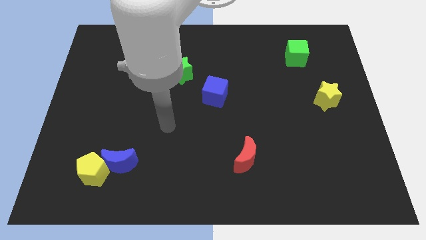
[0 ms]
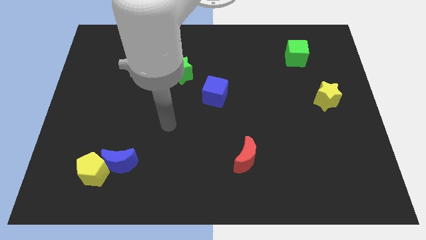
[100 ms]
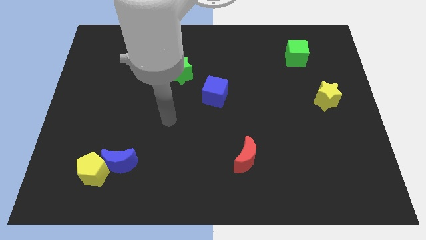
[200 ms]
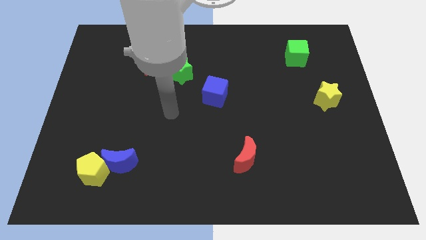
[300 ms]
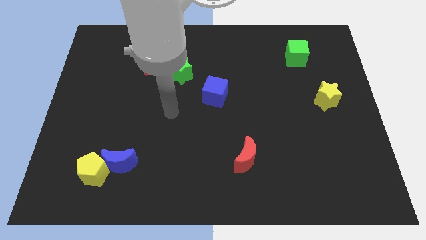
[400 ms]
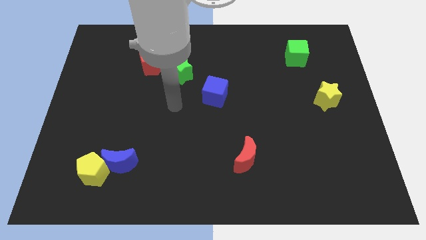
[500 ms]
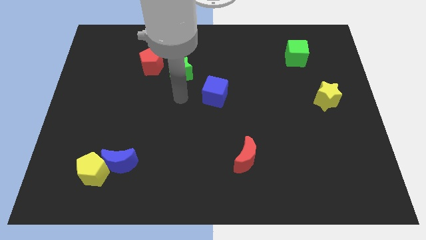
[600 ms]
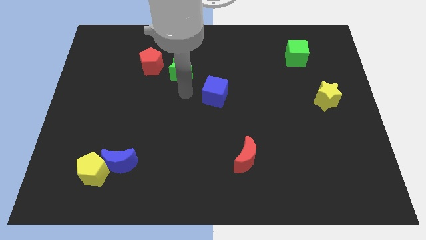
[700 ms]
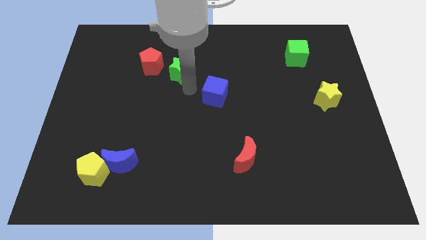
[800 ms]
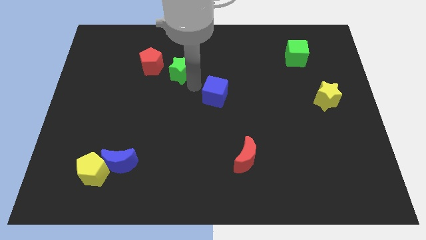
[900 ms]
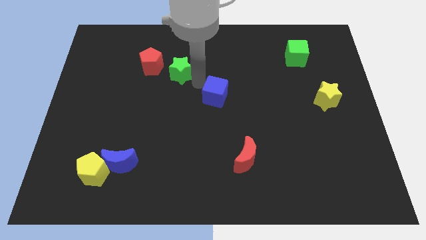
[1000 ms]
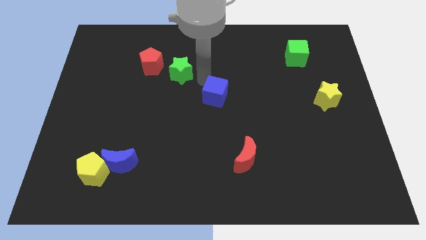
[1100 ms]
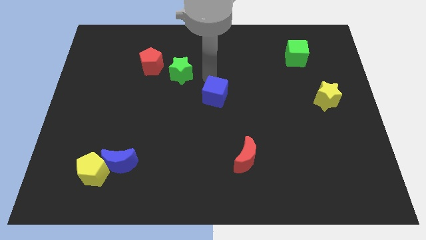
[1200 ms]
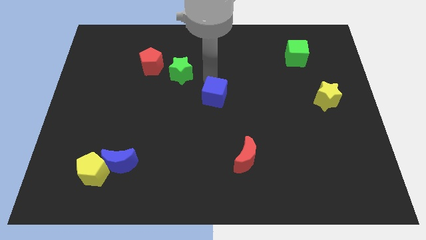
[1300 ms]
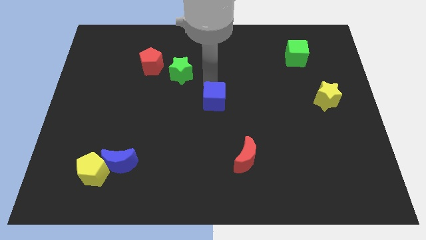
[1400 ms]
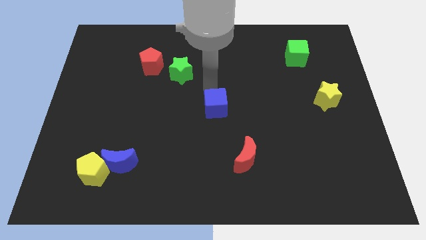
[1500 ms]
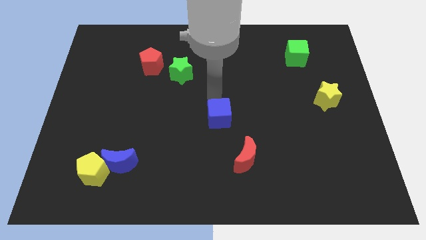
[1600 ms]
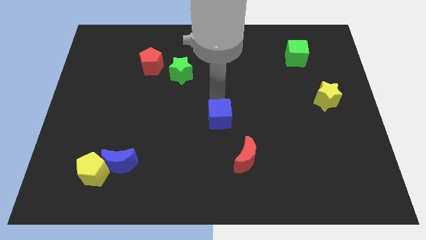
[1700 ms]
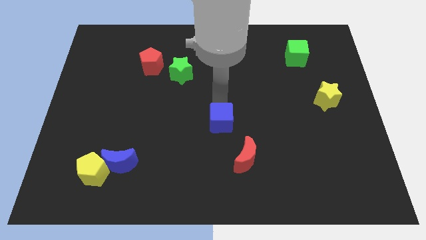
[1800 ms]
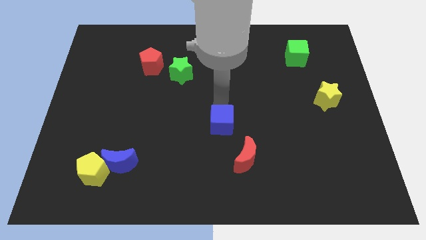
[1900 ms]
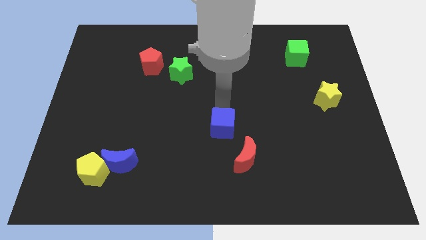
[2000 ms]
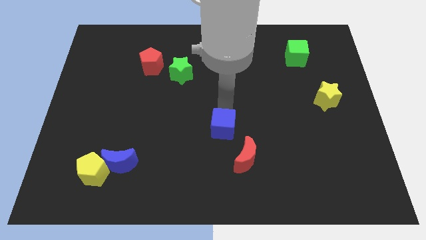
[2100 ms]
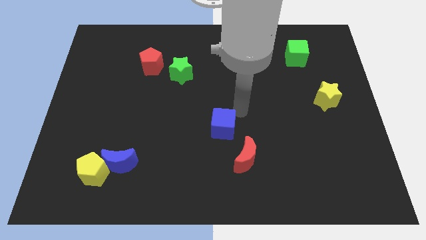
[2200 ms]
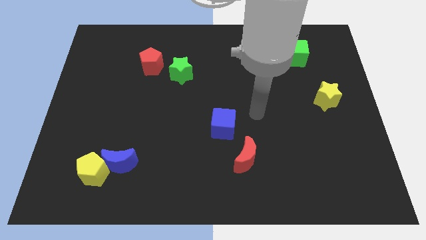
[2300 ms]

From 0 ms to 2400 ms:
place the blue cube slightly downward

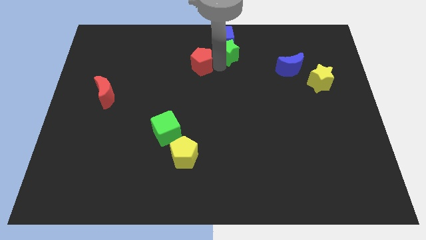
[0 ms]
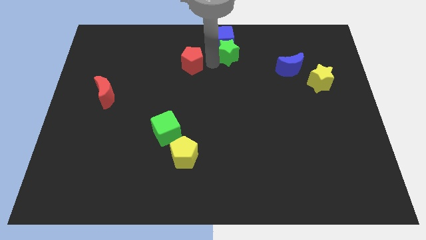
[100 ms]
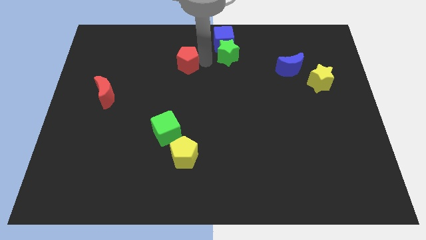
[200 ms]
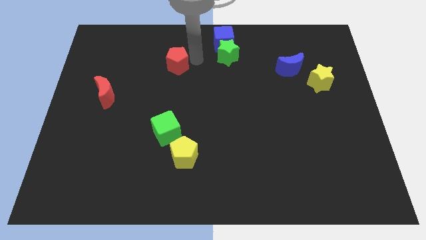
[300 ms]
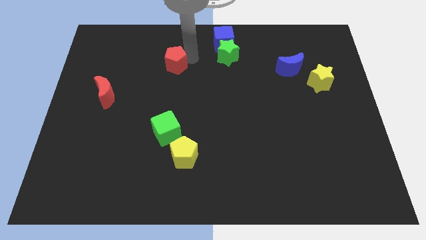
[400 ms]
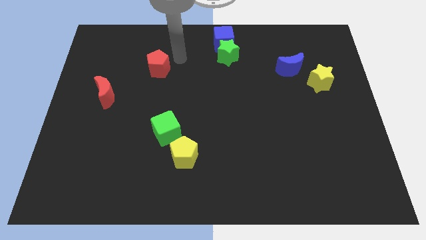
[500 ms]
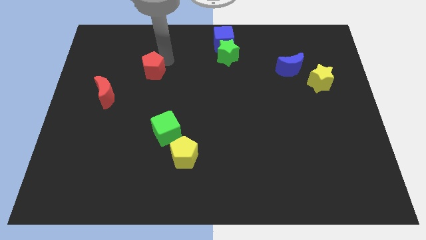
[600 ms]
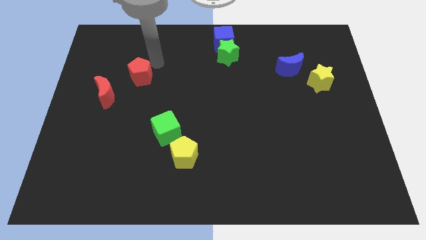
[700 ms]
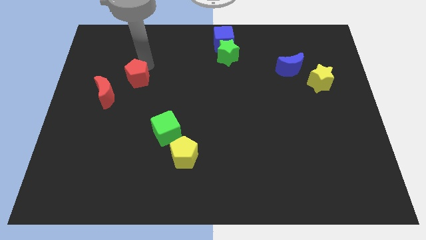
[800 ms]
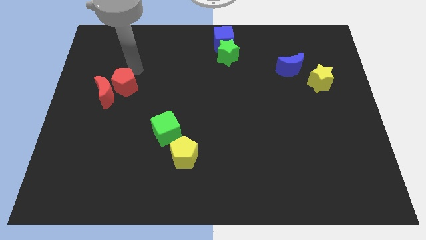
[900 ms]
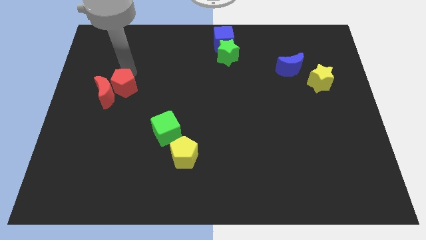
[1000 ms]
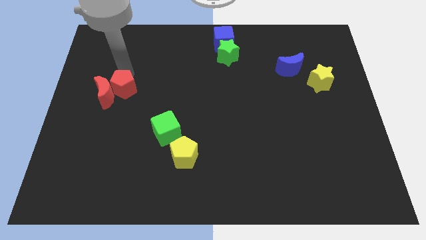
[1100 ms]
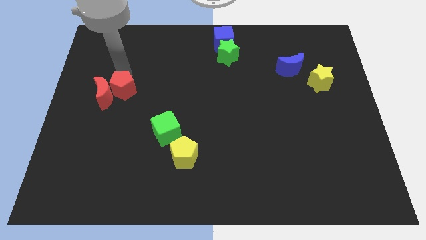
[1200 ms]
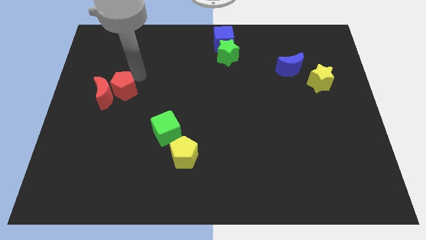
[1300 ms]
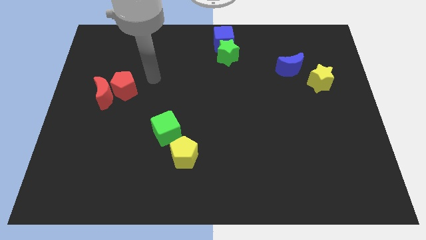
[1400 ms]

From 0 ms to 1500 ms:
put the red pentagon at top right to the red moon

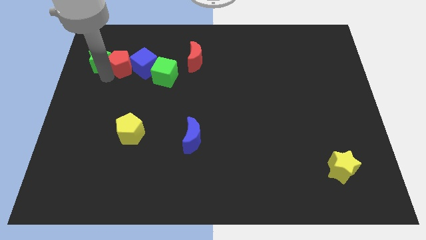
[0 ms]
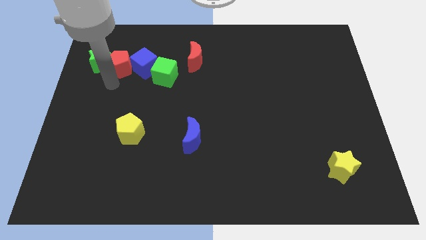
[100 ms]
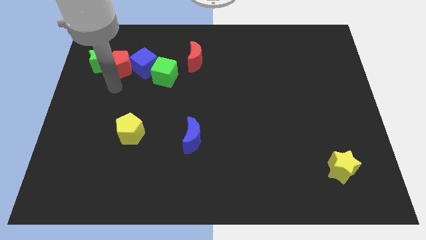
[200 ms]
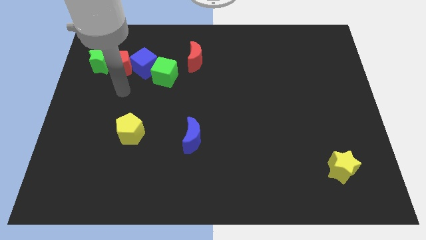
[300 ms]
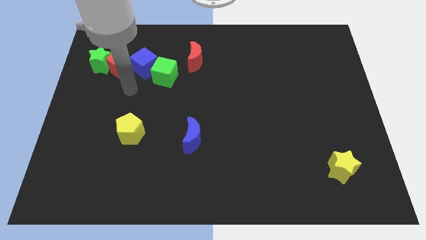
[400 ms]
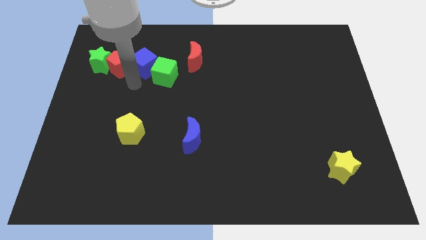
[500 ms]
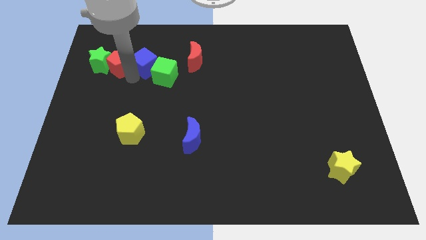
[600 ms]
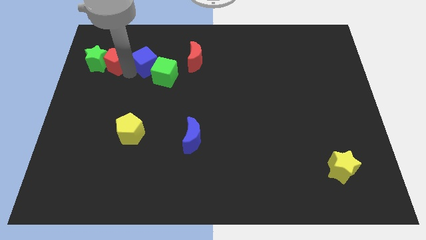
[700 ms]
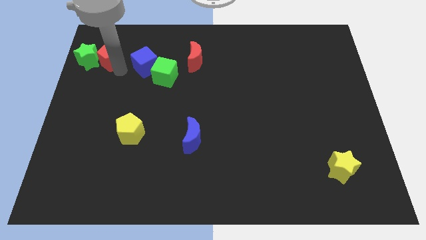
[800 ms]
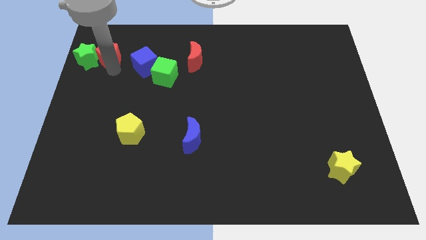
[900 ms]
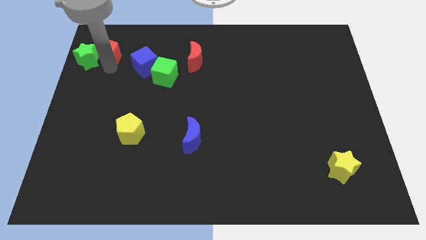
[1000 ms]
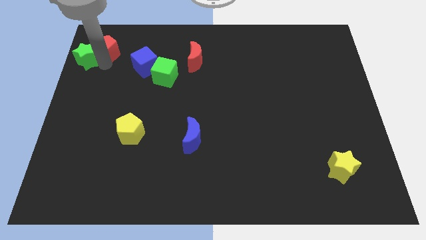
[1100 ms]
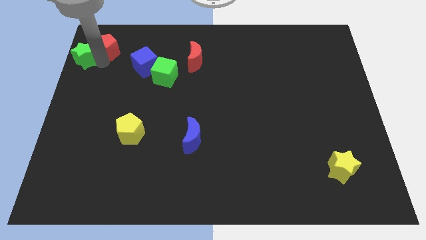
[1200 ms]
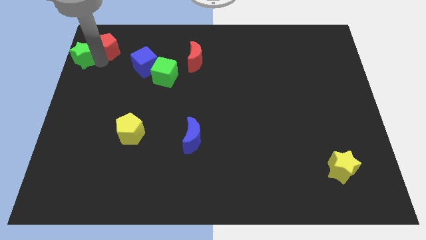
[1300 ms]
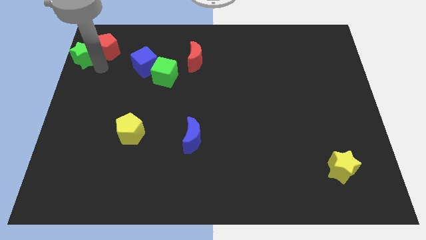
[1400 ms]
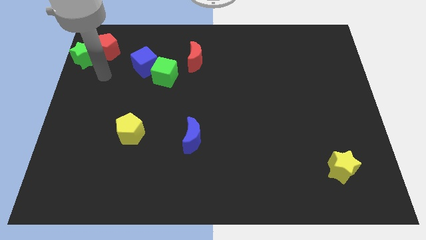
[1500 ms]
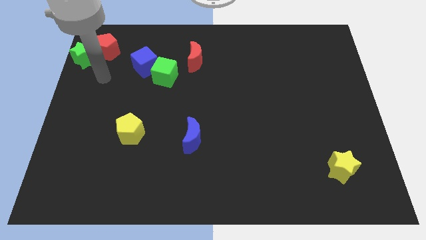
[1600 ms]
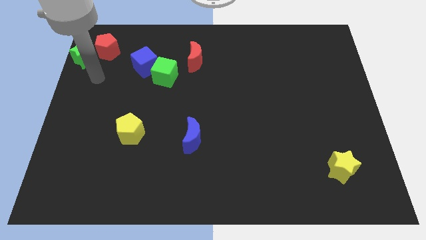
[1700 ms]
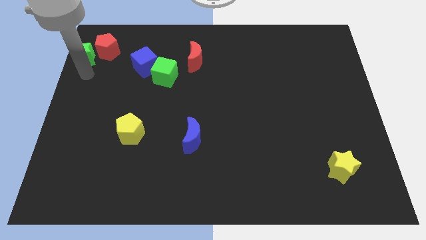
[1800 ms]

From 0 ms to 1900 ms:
push red pentagon along with green star towards left top

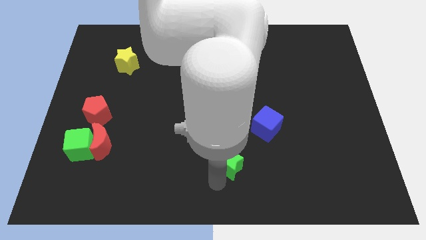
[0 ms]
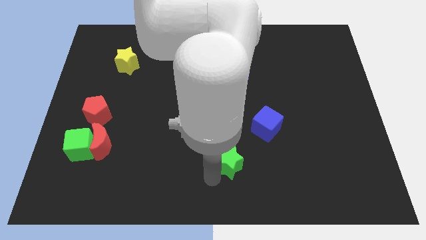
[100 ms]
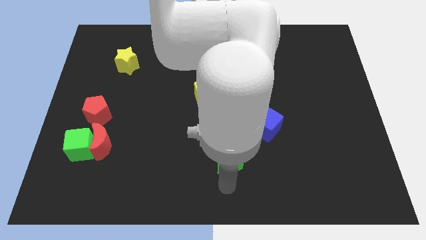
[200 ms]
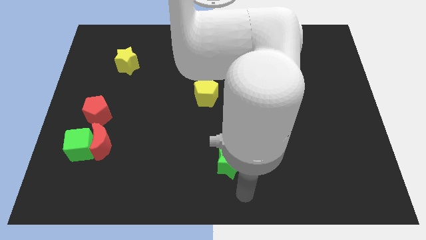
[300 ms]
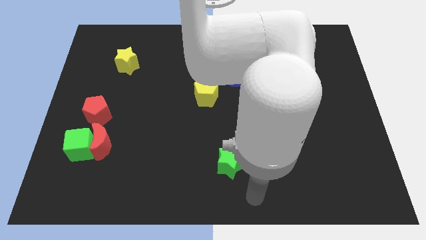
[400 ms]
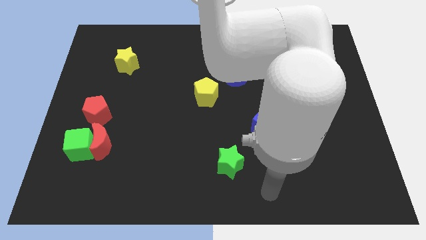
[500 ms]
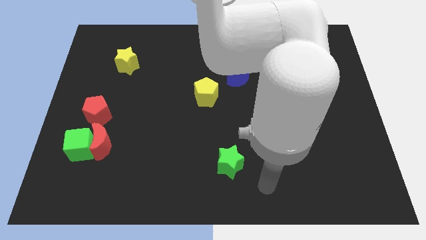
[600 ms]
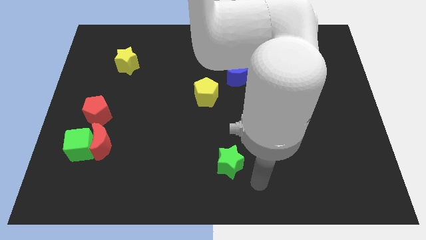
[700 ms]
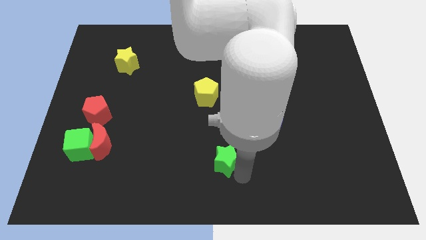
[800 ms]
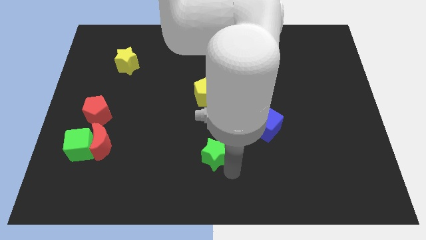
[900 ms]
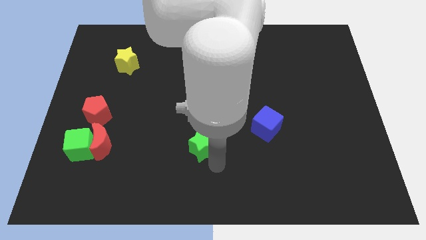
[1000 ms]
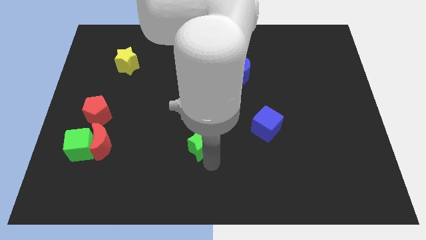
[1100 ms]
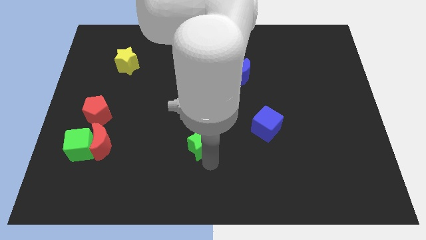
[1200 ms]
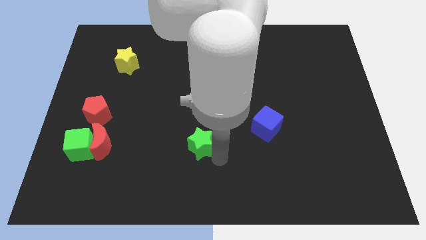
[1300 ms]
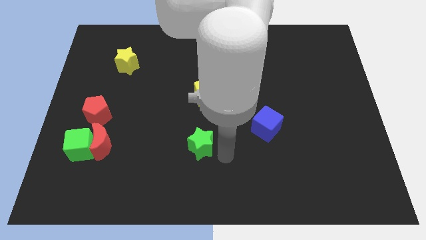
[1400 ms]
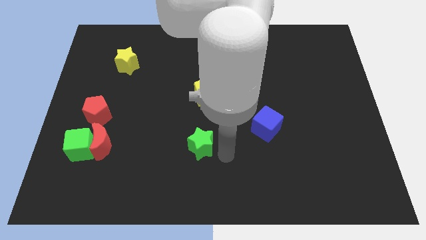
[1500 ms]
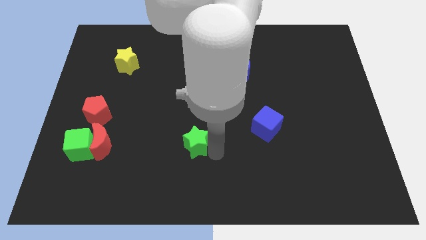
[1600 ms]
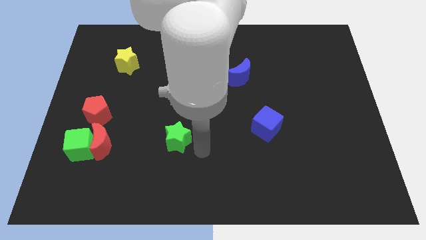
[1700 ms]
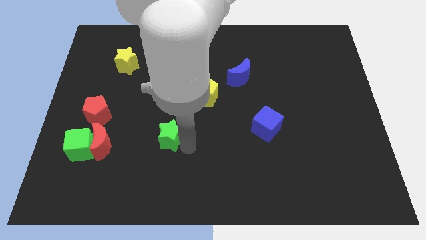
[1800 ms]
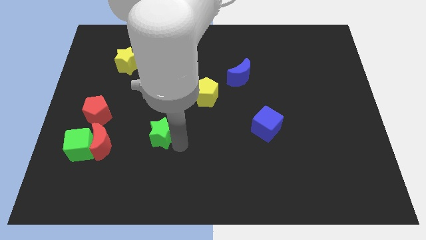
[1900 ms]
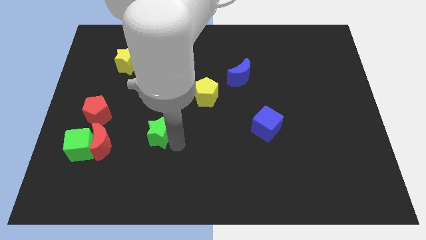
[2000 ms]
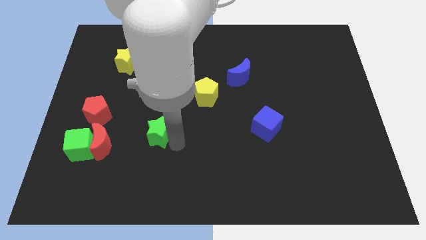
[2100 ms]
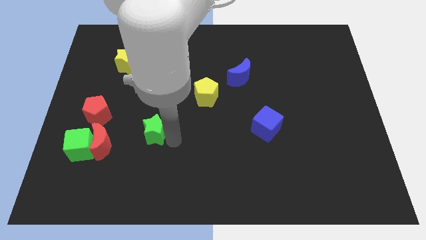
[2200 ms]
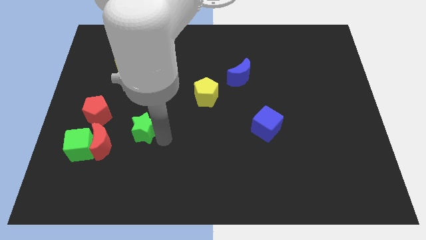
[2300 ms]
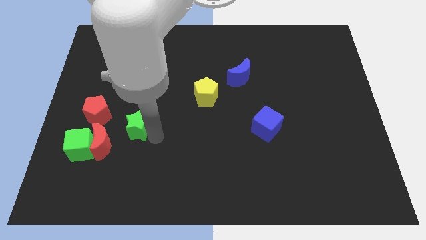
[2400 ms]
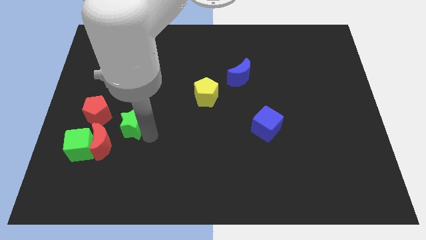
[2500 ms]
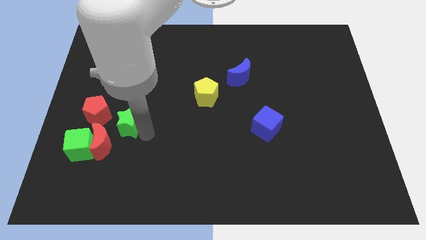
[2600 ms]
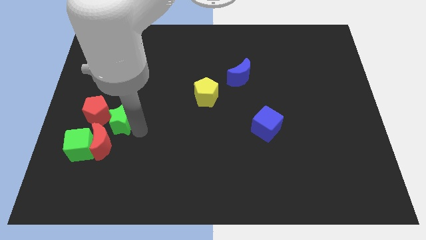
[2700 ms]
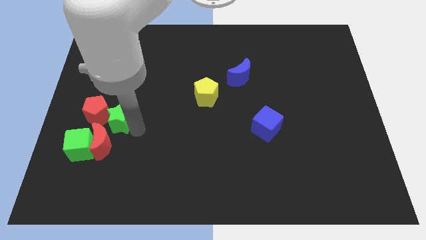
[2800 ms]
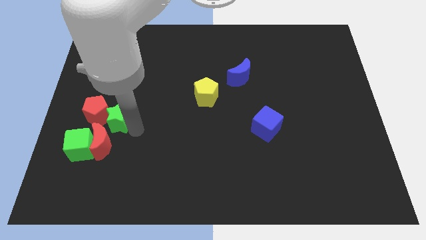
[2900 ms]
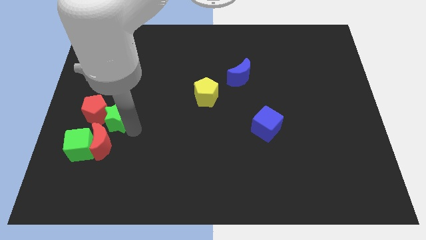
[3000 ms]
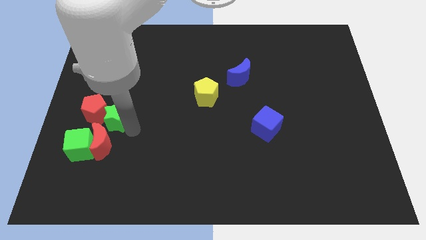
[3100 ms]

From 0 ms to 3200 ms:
move green star towards red pentagon

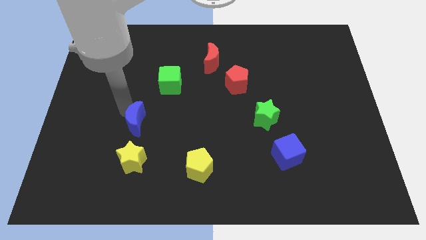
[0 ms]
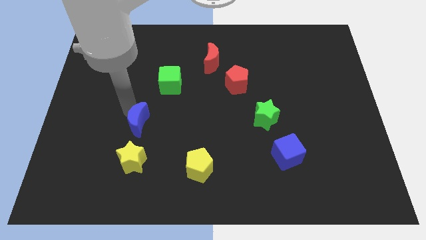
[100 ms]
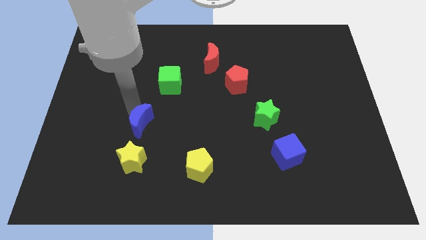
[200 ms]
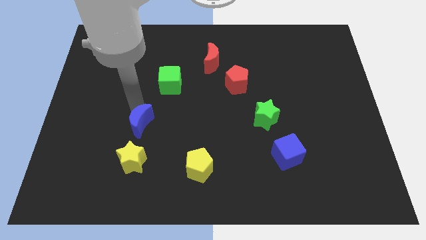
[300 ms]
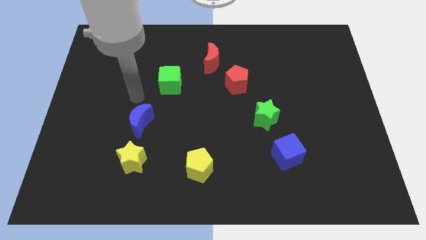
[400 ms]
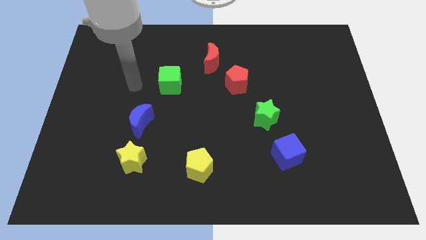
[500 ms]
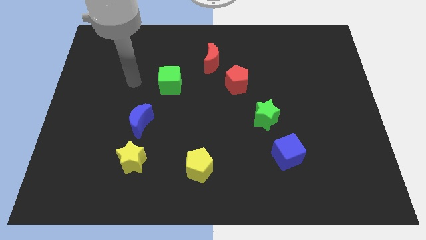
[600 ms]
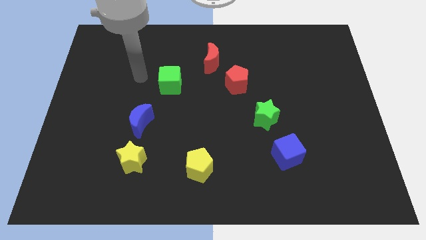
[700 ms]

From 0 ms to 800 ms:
push the blue crescent slightly to the right
